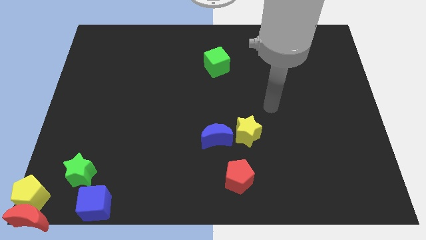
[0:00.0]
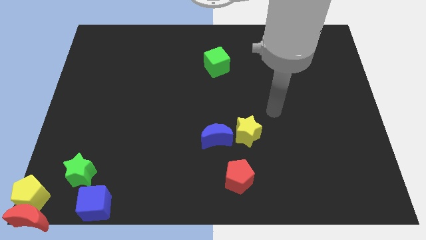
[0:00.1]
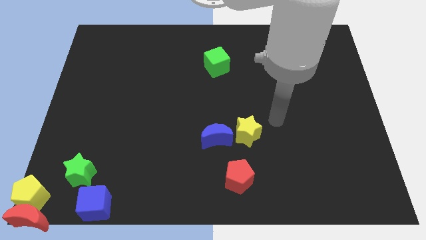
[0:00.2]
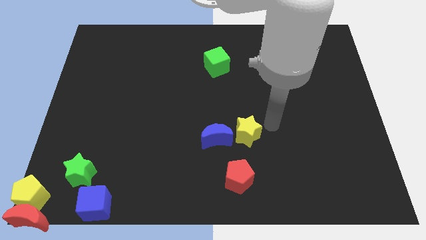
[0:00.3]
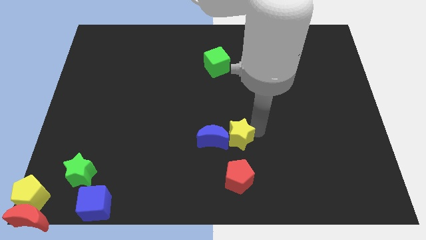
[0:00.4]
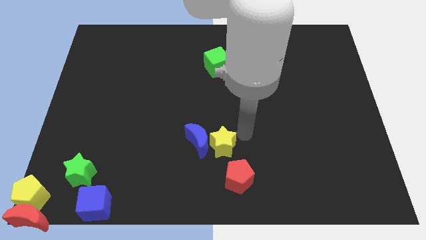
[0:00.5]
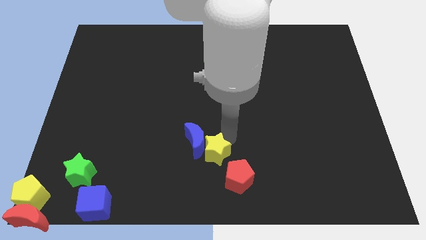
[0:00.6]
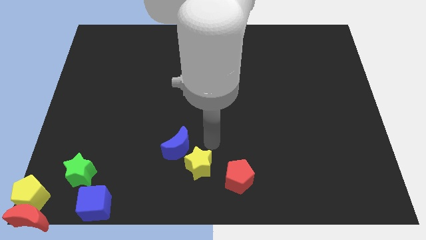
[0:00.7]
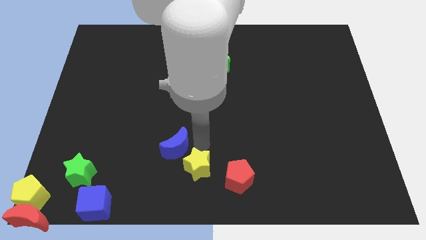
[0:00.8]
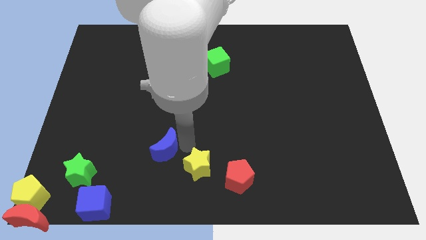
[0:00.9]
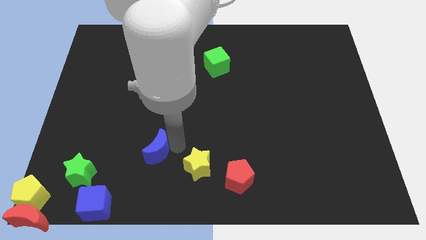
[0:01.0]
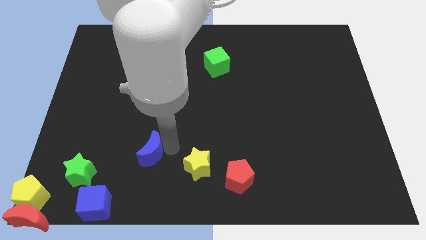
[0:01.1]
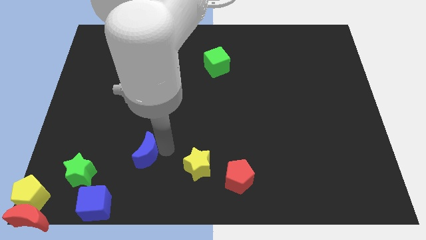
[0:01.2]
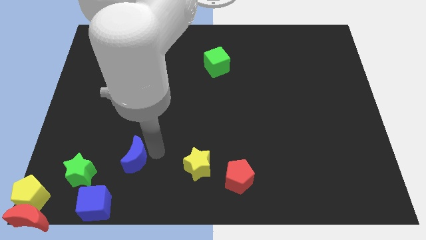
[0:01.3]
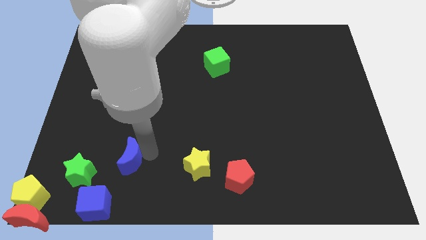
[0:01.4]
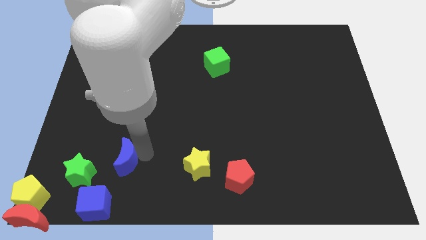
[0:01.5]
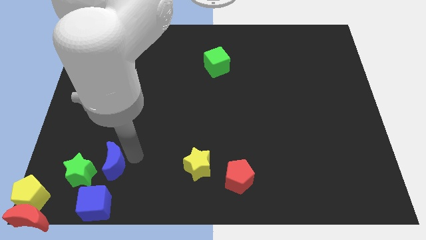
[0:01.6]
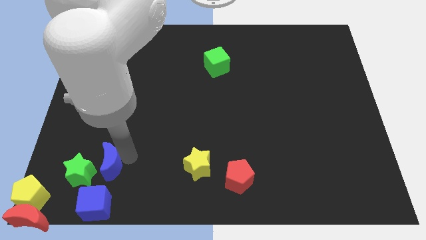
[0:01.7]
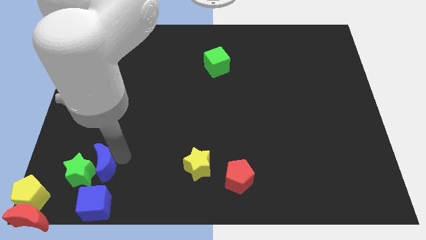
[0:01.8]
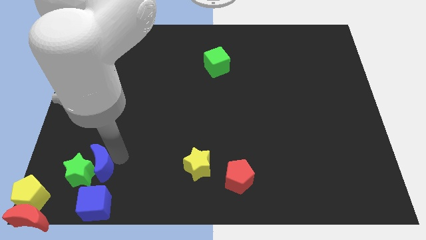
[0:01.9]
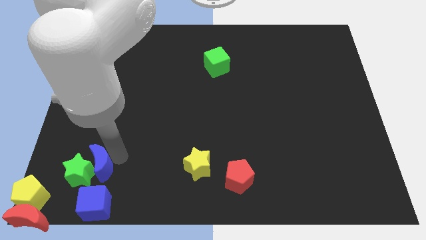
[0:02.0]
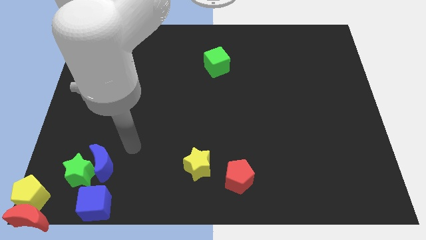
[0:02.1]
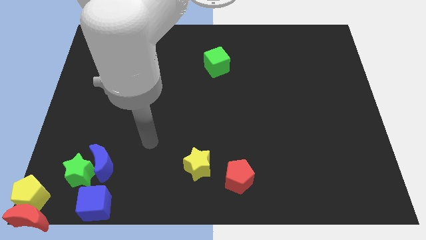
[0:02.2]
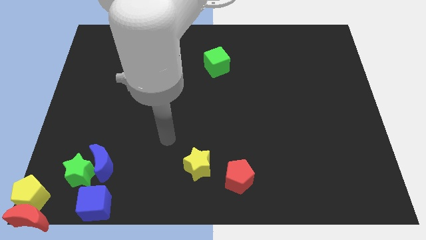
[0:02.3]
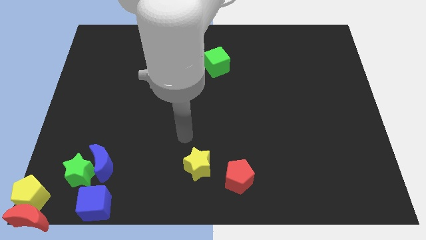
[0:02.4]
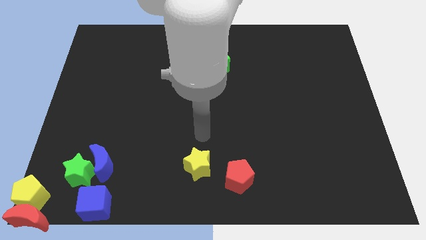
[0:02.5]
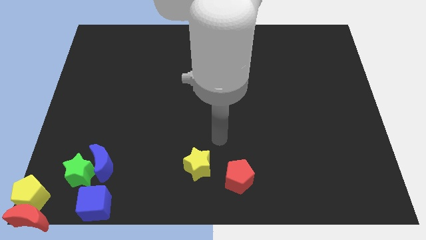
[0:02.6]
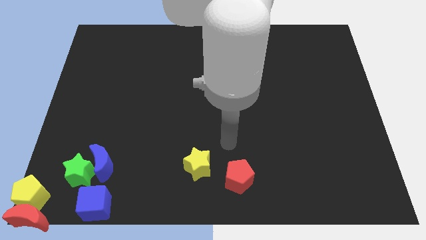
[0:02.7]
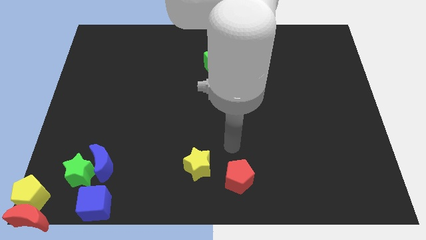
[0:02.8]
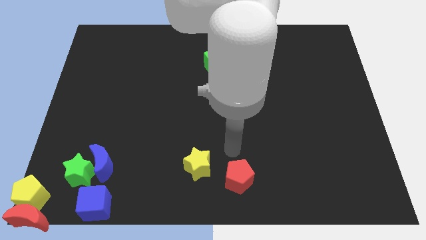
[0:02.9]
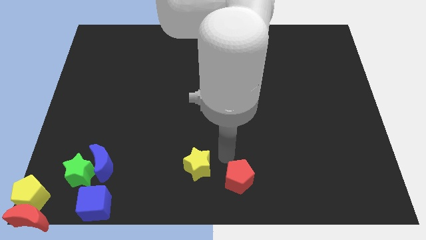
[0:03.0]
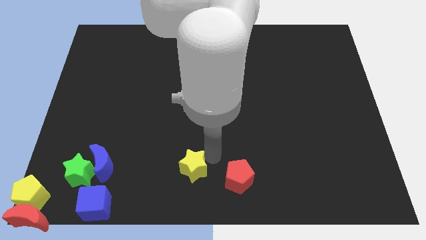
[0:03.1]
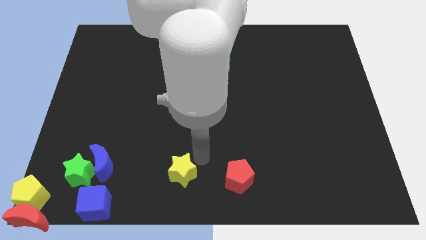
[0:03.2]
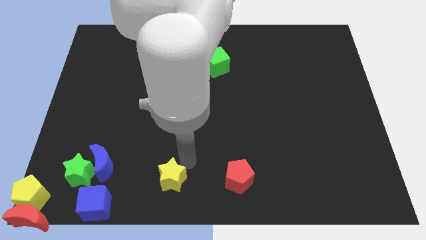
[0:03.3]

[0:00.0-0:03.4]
push the blue crescent to the right of the green star

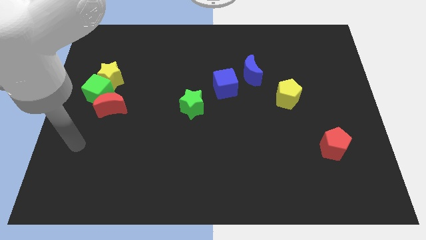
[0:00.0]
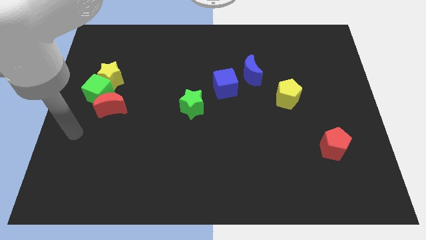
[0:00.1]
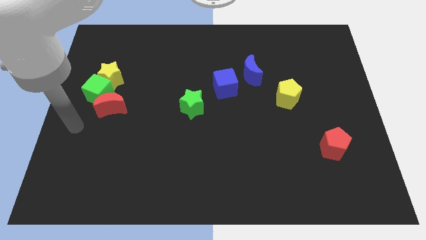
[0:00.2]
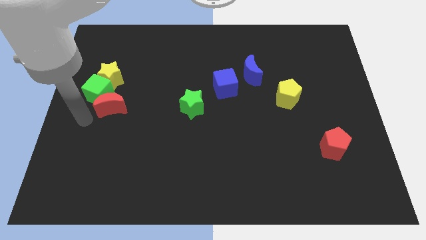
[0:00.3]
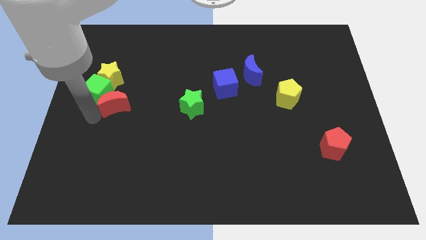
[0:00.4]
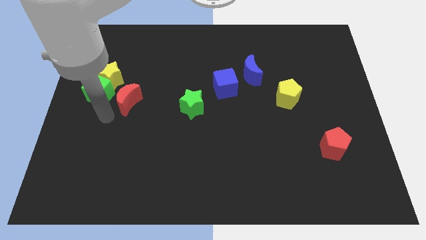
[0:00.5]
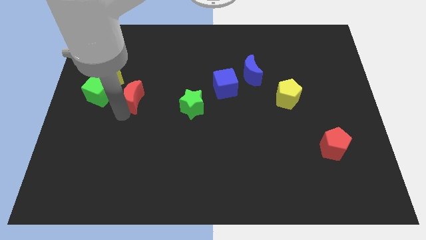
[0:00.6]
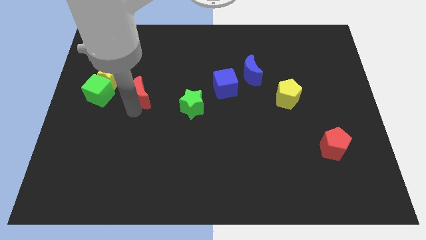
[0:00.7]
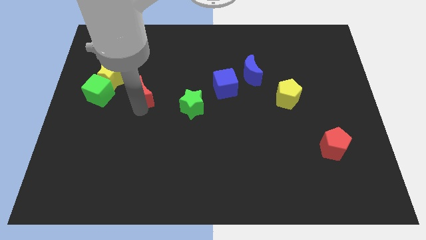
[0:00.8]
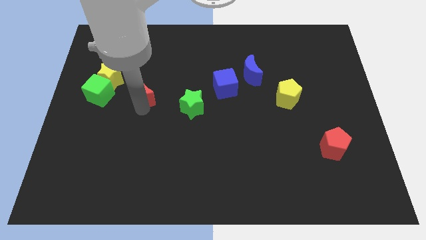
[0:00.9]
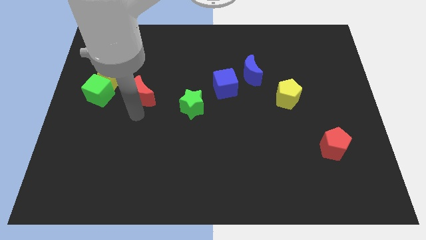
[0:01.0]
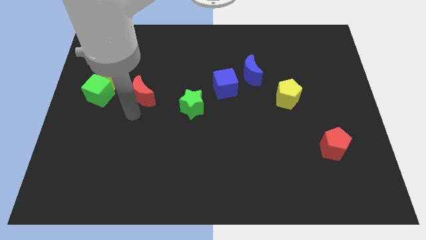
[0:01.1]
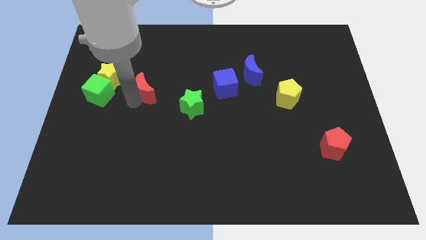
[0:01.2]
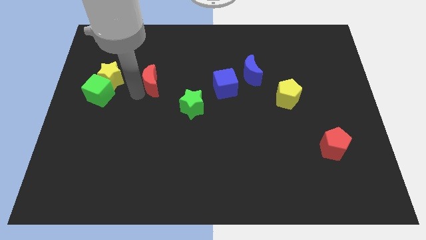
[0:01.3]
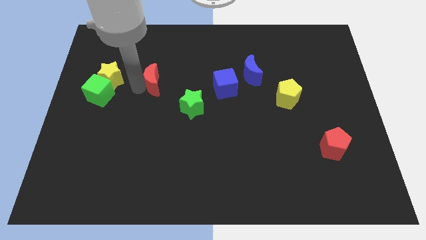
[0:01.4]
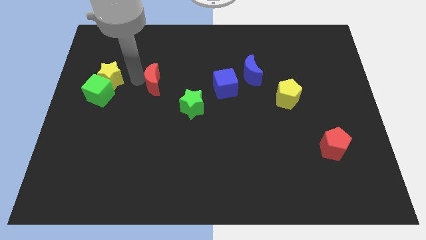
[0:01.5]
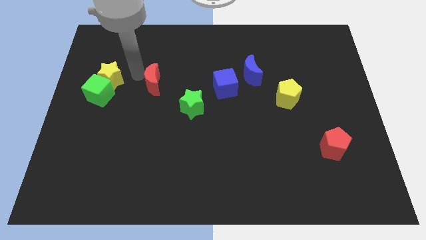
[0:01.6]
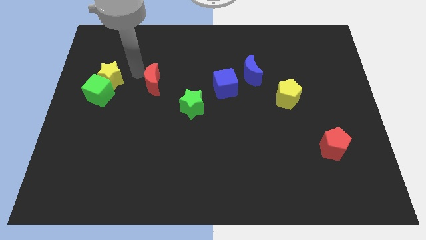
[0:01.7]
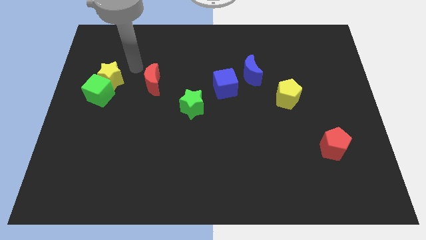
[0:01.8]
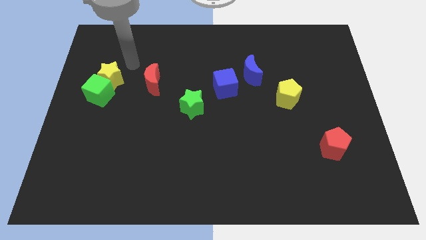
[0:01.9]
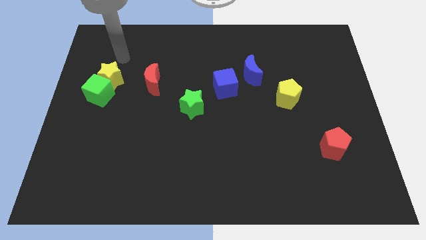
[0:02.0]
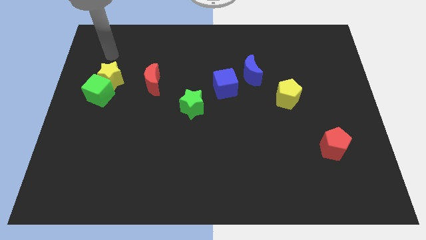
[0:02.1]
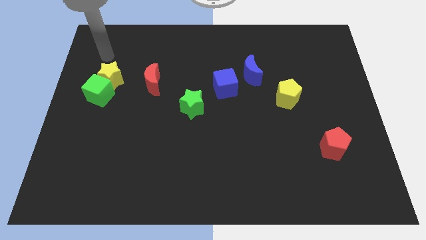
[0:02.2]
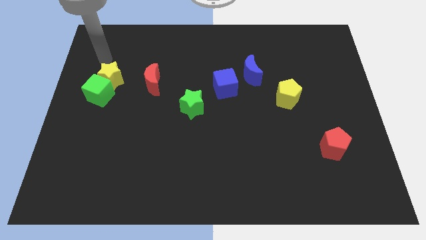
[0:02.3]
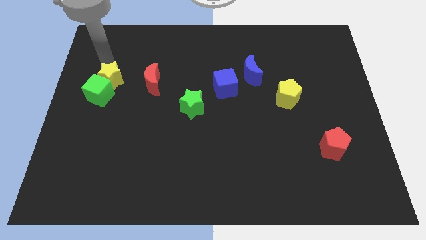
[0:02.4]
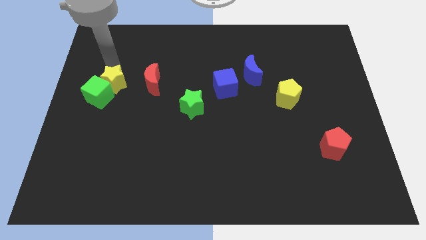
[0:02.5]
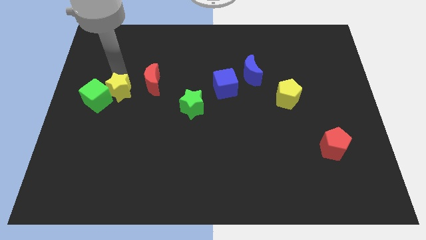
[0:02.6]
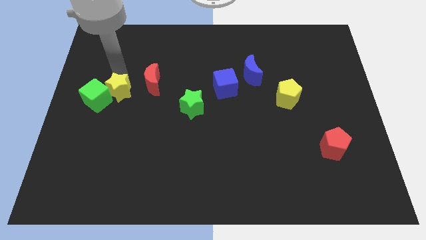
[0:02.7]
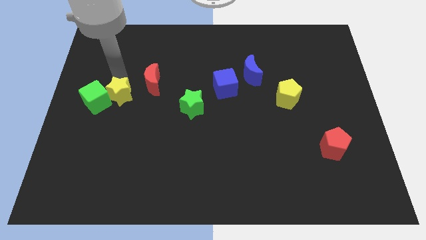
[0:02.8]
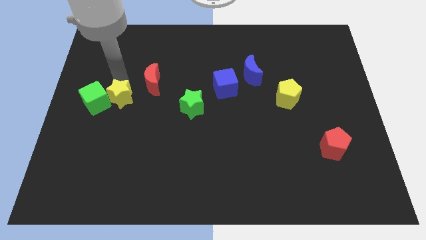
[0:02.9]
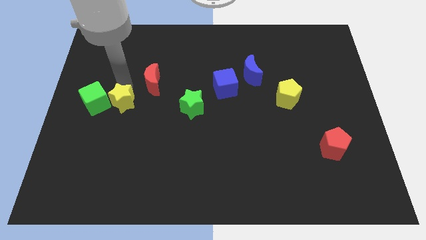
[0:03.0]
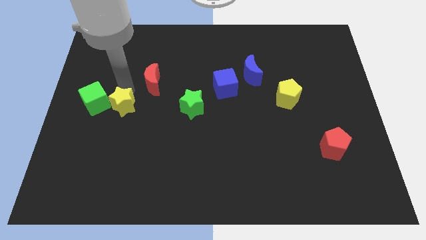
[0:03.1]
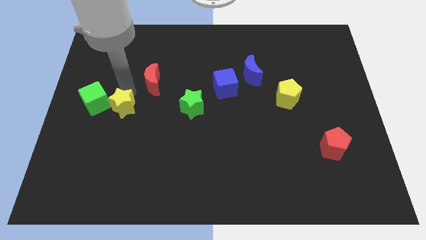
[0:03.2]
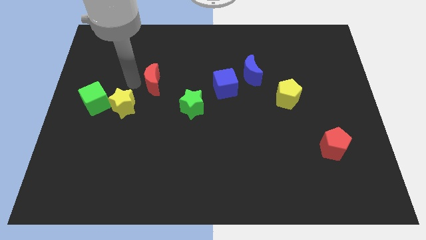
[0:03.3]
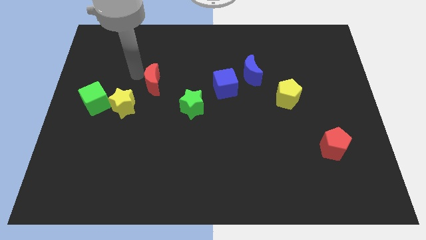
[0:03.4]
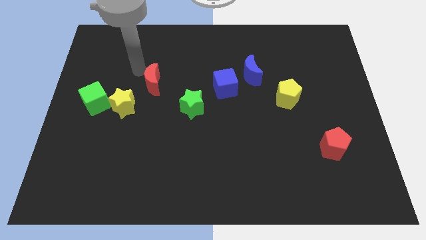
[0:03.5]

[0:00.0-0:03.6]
push the yellow star to the bottom slightly

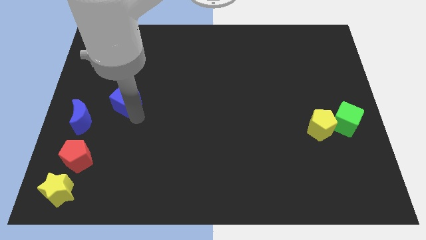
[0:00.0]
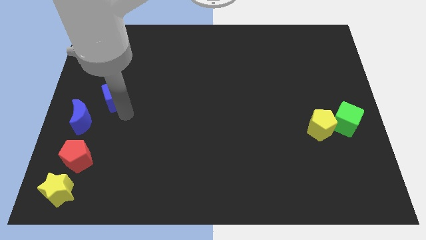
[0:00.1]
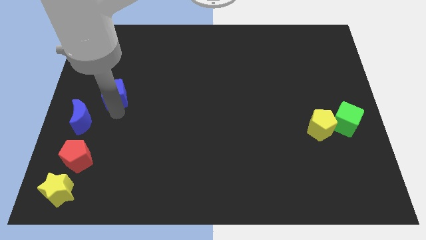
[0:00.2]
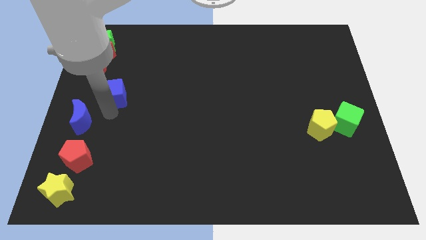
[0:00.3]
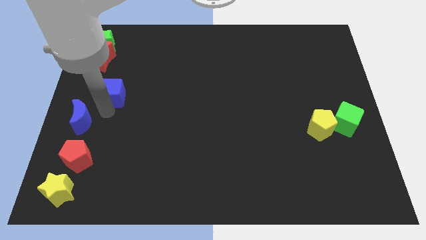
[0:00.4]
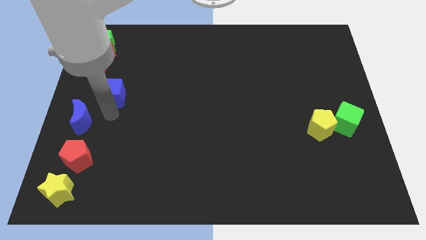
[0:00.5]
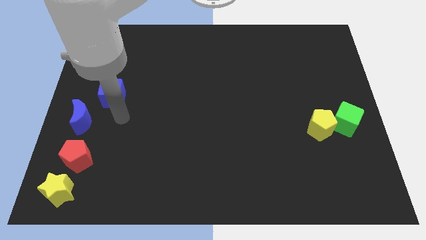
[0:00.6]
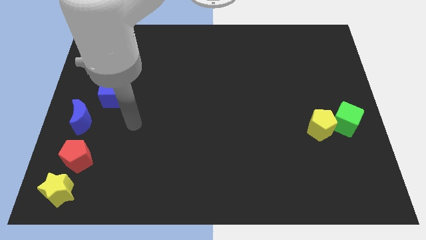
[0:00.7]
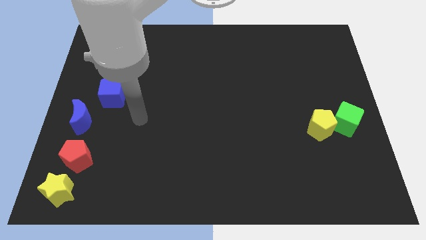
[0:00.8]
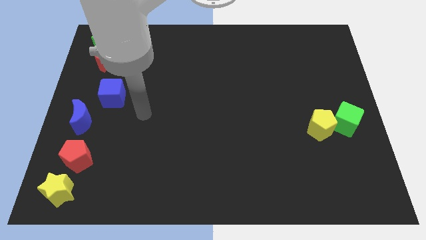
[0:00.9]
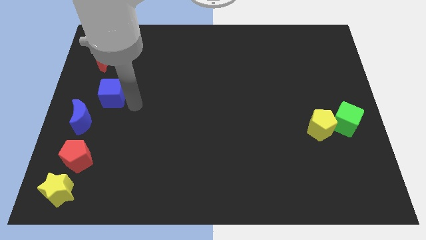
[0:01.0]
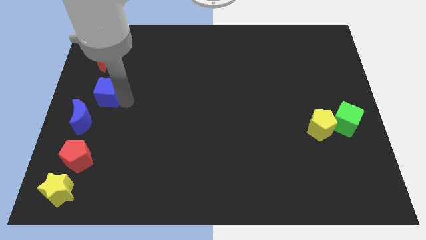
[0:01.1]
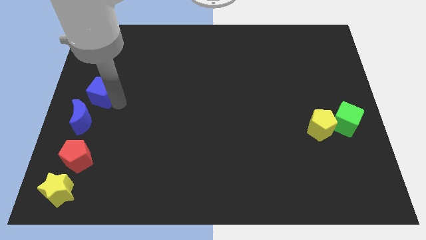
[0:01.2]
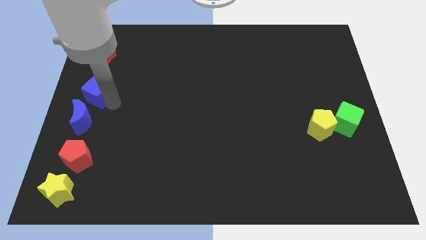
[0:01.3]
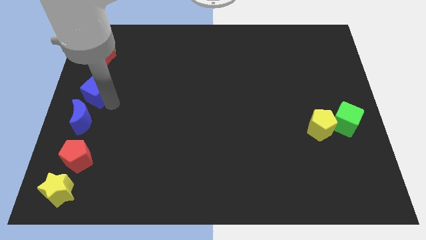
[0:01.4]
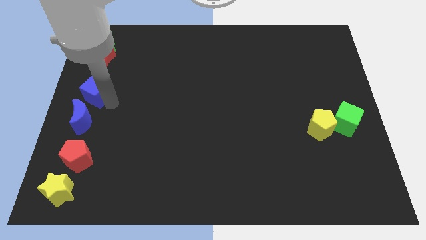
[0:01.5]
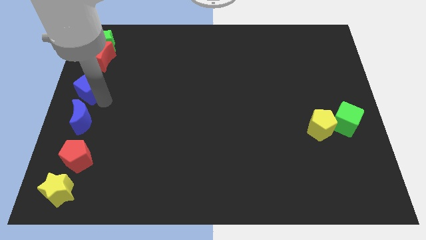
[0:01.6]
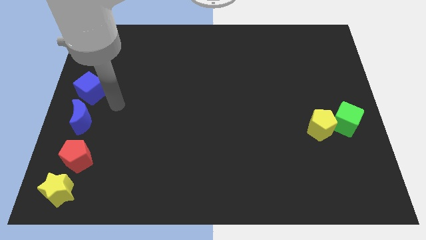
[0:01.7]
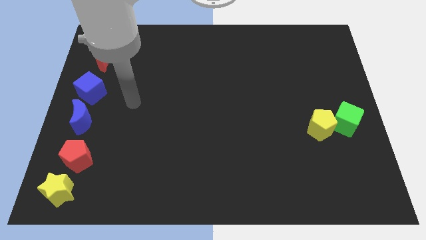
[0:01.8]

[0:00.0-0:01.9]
adjust the blue cube in between both crescents

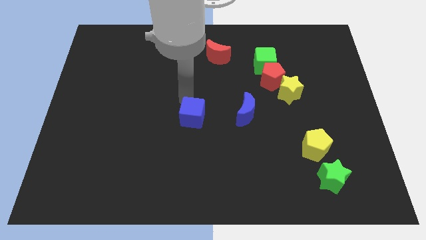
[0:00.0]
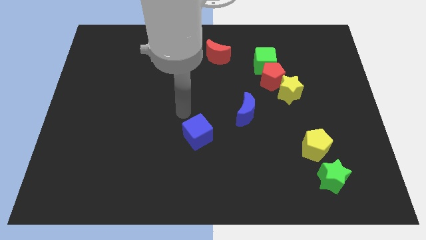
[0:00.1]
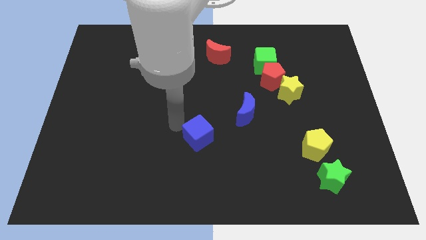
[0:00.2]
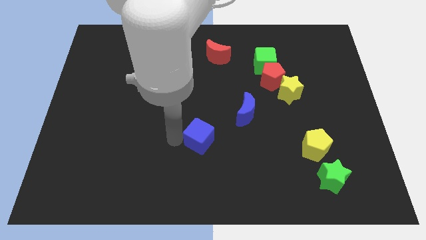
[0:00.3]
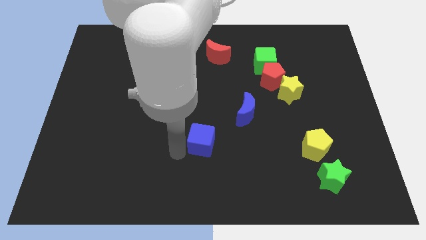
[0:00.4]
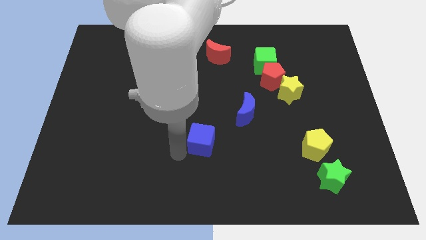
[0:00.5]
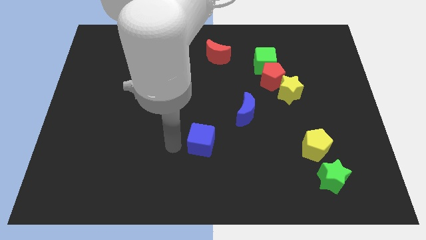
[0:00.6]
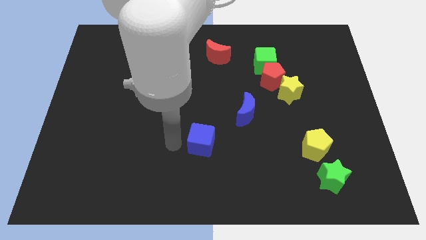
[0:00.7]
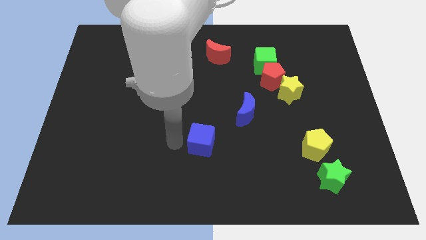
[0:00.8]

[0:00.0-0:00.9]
place the blue cube left to the yellow pentagon
